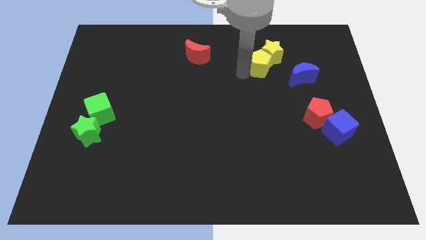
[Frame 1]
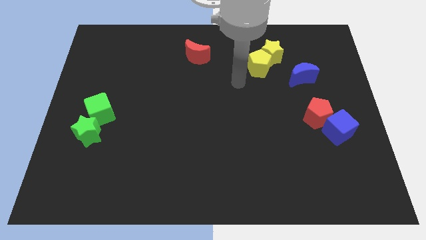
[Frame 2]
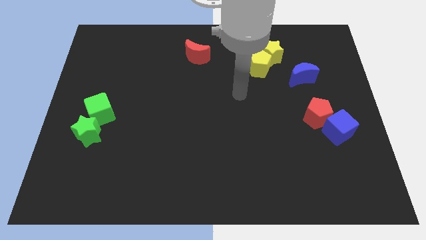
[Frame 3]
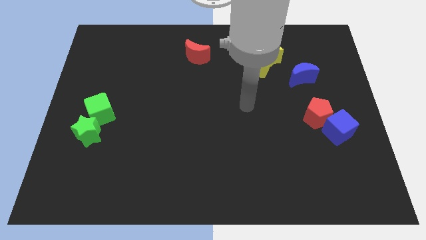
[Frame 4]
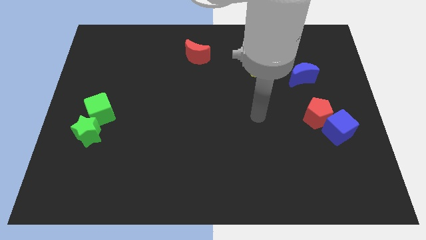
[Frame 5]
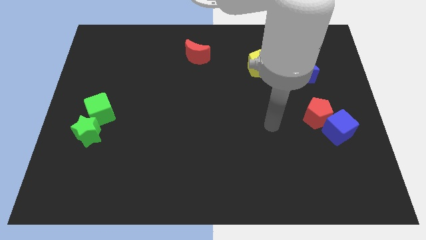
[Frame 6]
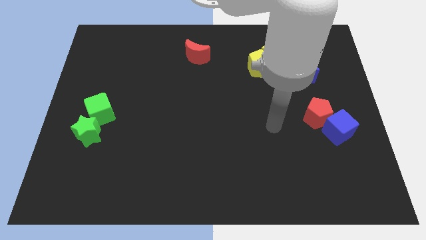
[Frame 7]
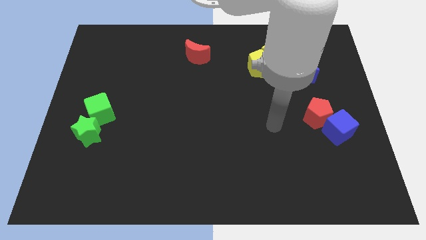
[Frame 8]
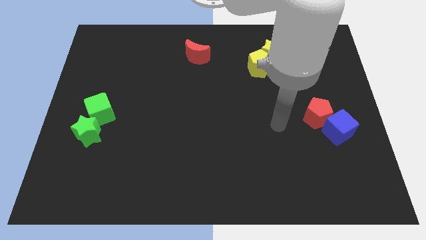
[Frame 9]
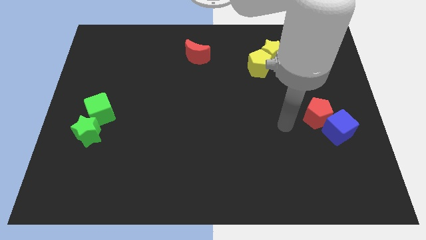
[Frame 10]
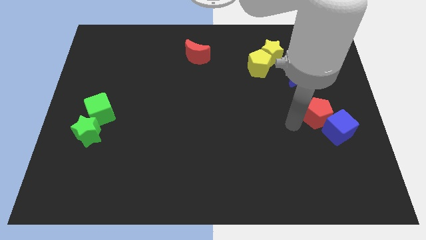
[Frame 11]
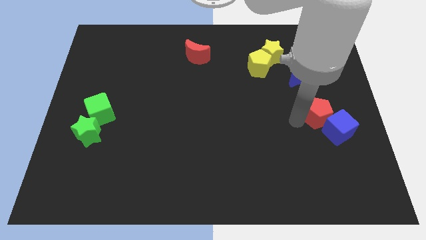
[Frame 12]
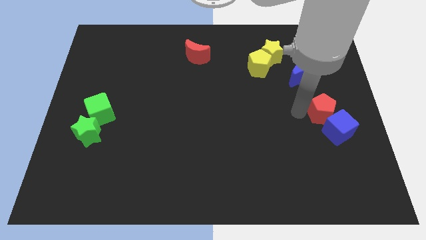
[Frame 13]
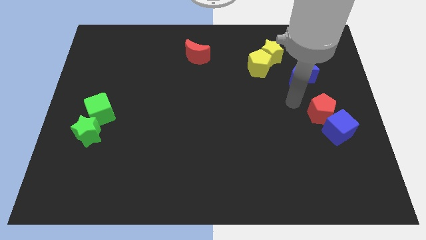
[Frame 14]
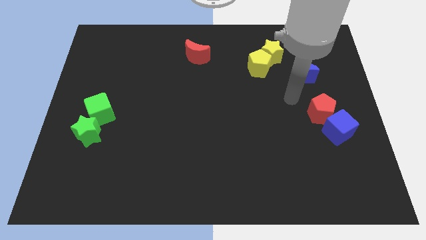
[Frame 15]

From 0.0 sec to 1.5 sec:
move your arm away from the yellow pentagon

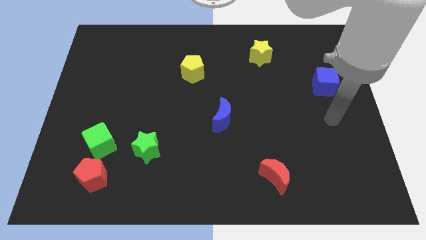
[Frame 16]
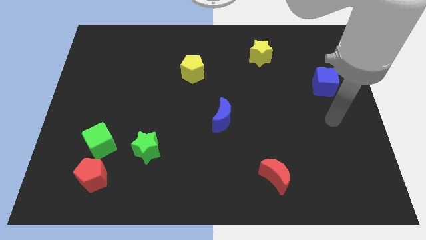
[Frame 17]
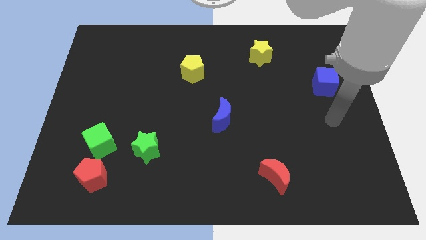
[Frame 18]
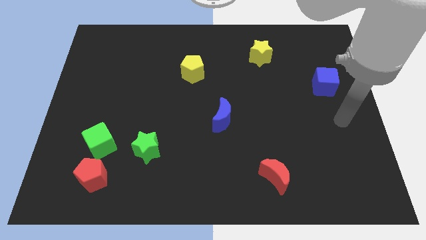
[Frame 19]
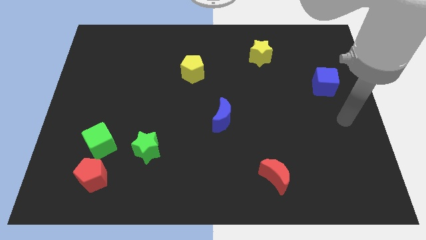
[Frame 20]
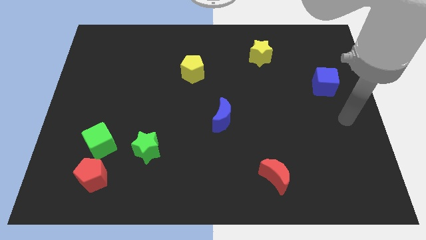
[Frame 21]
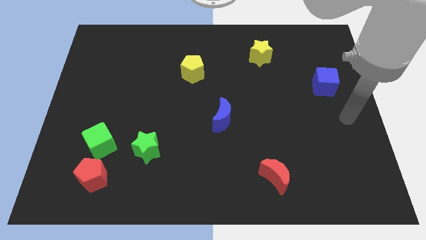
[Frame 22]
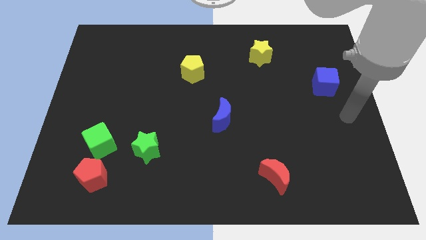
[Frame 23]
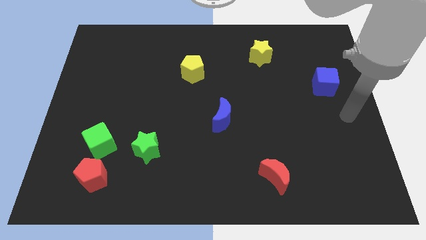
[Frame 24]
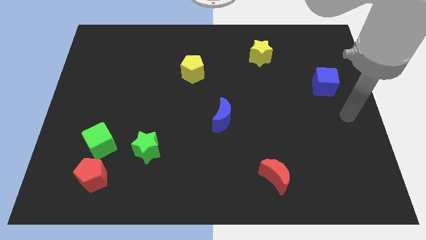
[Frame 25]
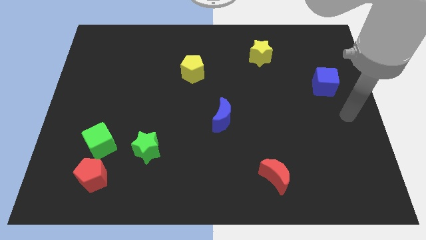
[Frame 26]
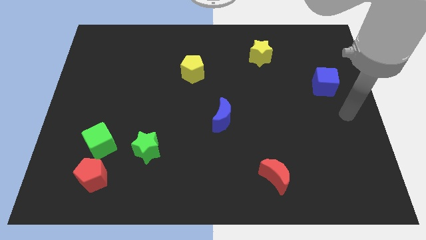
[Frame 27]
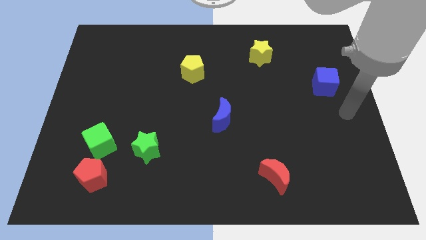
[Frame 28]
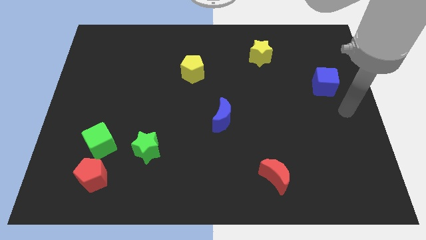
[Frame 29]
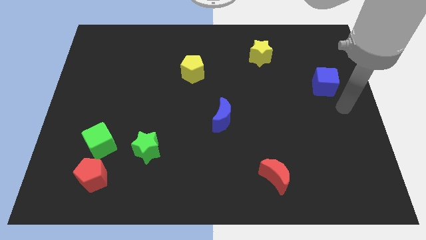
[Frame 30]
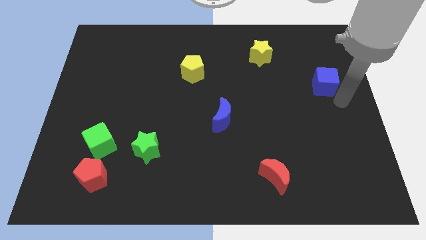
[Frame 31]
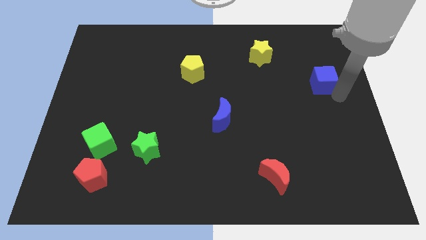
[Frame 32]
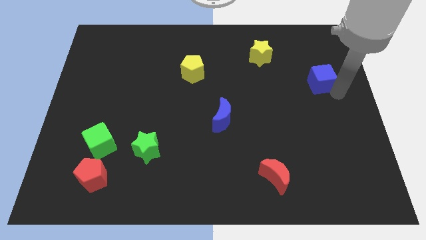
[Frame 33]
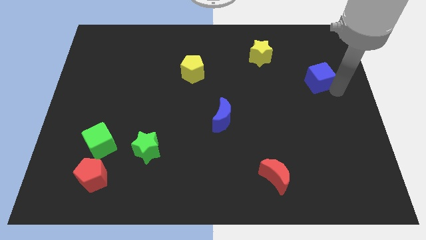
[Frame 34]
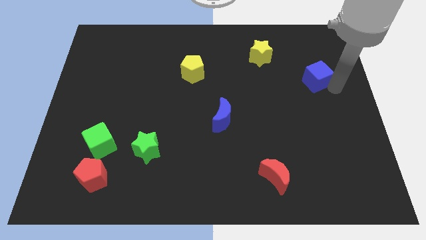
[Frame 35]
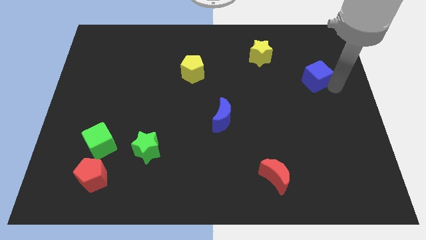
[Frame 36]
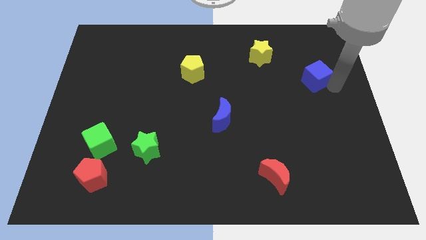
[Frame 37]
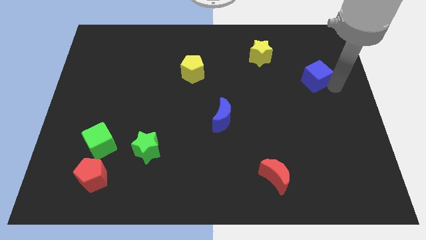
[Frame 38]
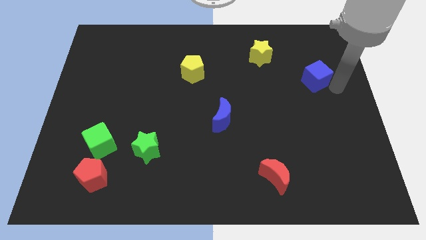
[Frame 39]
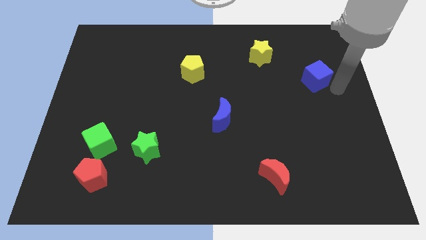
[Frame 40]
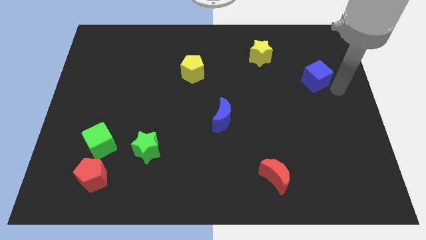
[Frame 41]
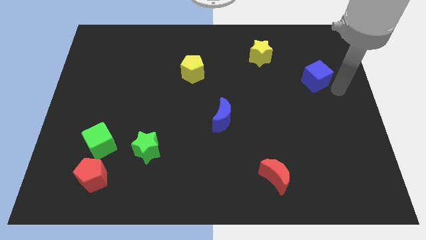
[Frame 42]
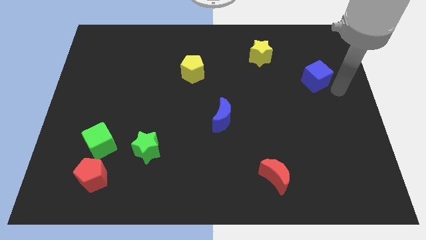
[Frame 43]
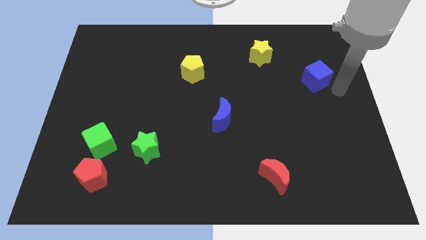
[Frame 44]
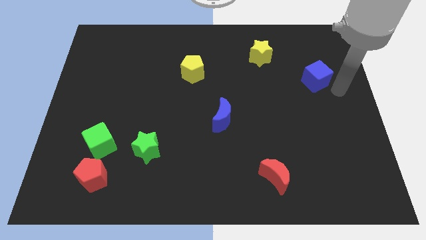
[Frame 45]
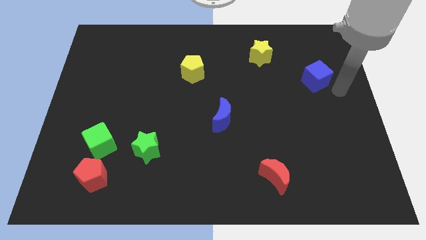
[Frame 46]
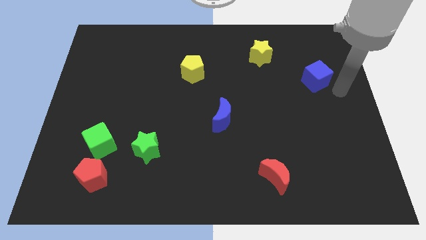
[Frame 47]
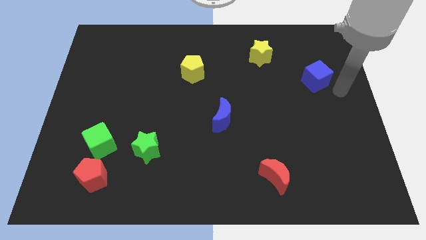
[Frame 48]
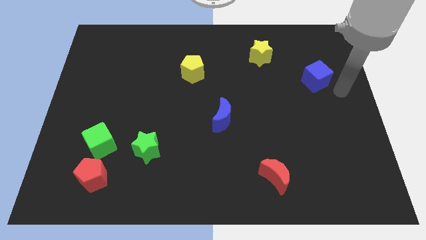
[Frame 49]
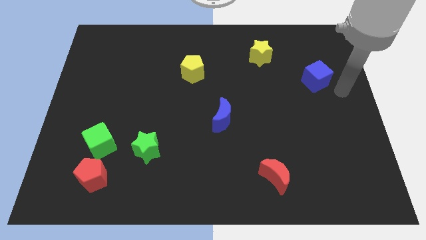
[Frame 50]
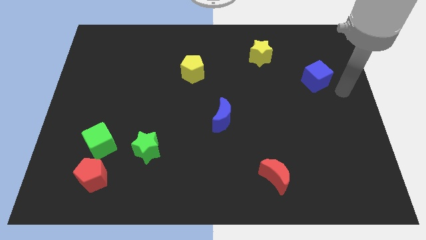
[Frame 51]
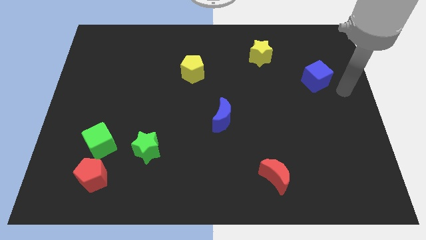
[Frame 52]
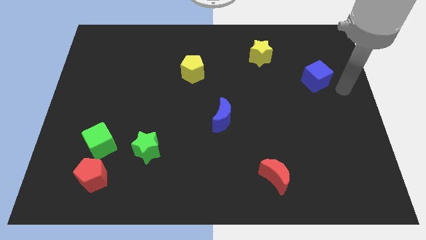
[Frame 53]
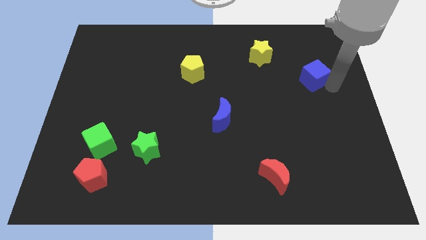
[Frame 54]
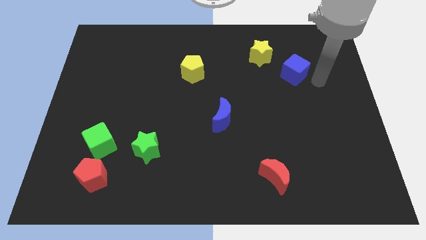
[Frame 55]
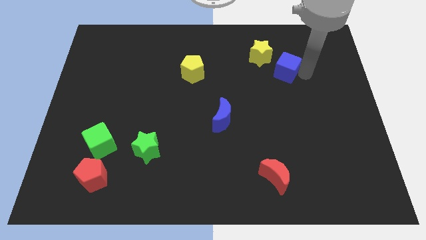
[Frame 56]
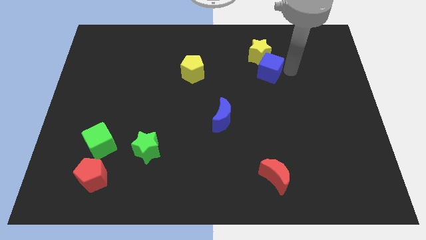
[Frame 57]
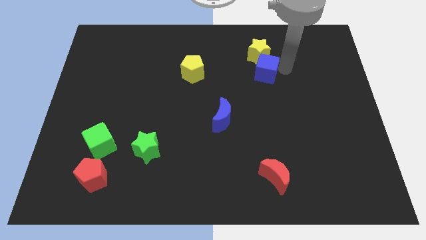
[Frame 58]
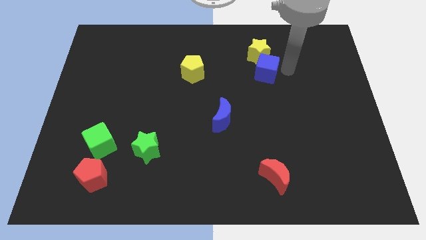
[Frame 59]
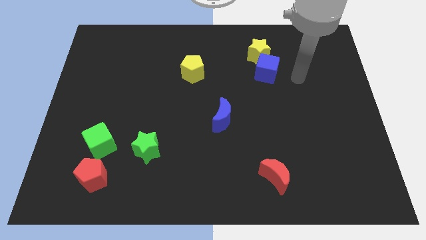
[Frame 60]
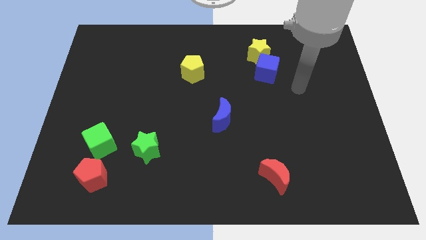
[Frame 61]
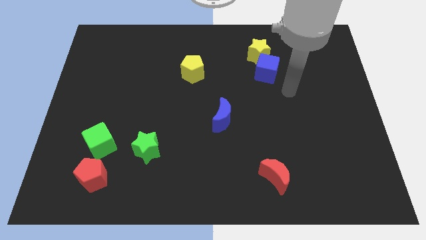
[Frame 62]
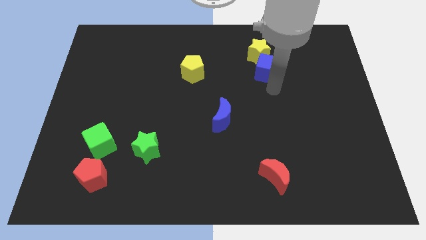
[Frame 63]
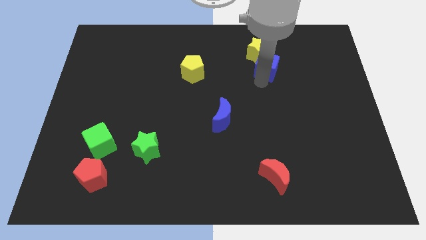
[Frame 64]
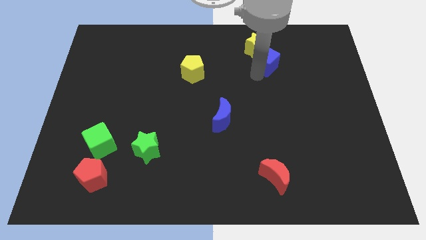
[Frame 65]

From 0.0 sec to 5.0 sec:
push the blue cube into the yellow star

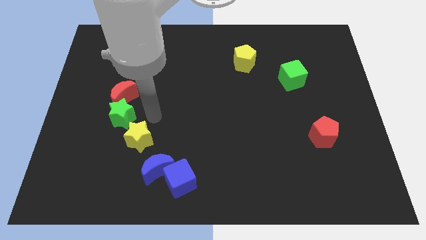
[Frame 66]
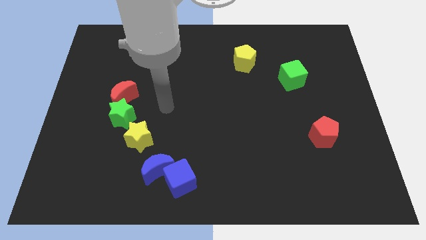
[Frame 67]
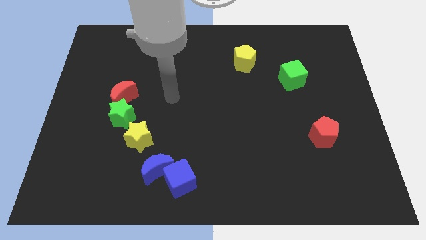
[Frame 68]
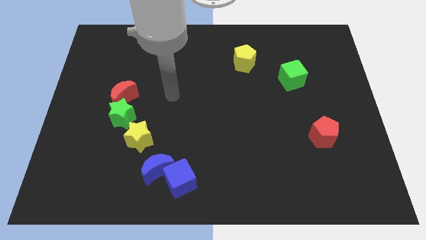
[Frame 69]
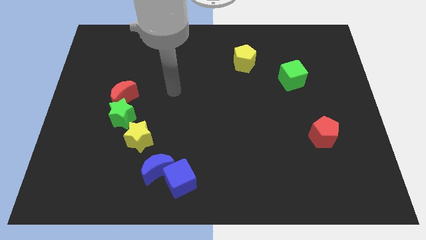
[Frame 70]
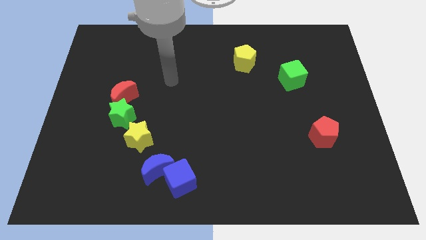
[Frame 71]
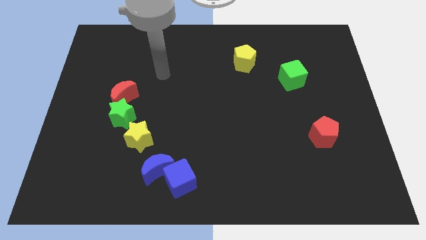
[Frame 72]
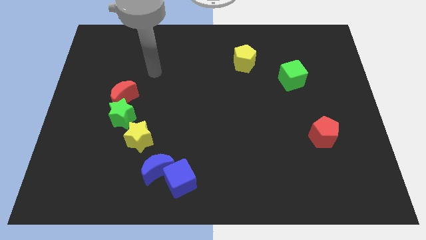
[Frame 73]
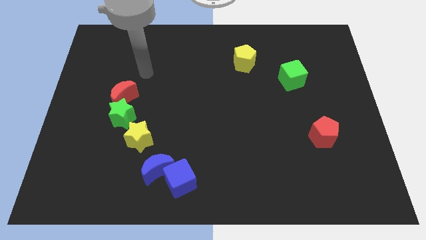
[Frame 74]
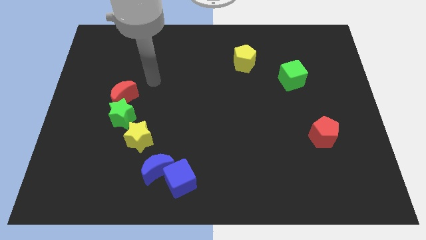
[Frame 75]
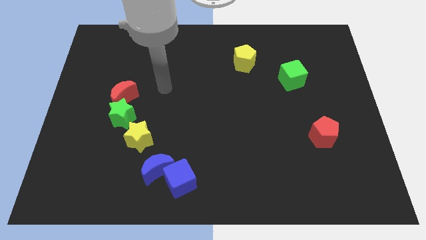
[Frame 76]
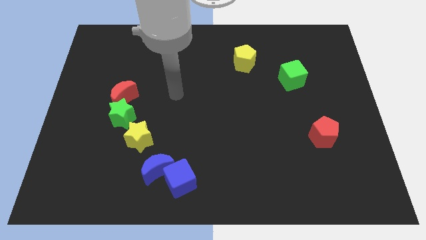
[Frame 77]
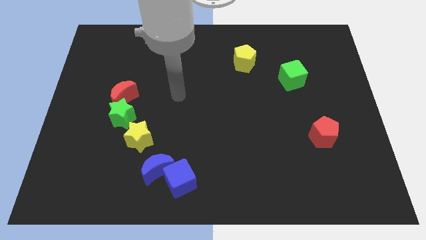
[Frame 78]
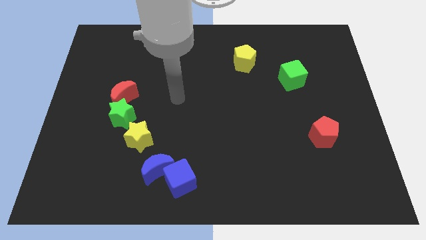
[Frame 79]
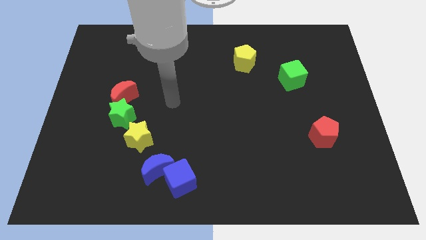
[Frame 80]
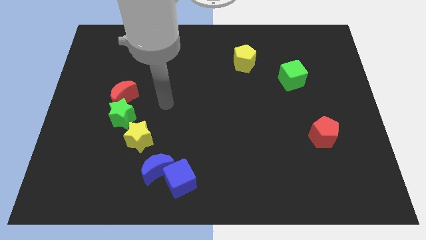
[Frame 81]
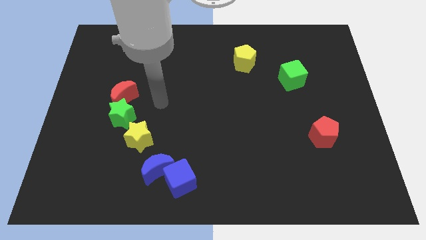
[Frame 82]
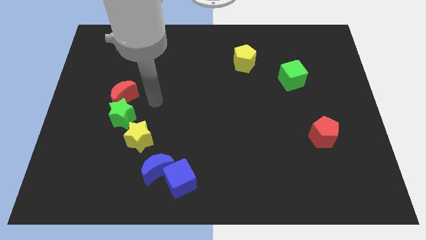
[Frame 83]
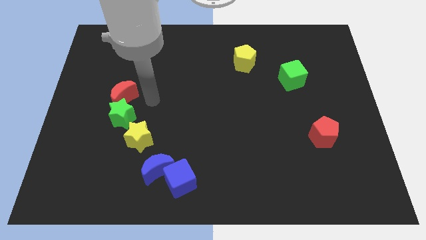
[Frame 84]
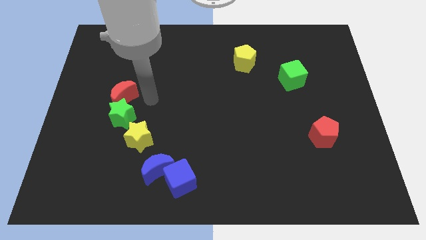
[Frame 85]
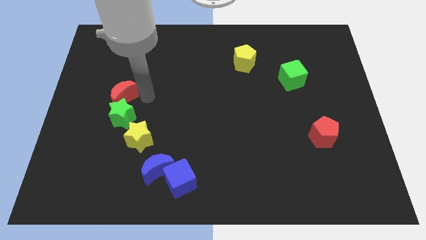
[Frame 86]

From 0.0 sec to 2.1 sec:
point your arm at the bottom right side of red moon

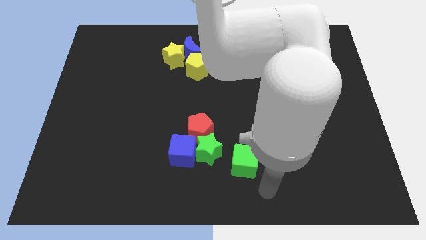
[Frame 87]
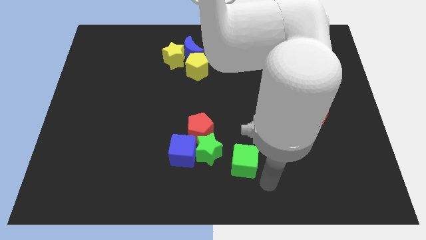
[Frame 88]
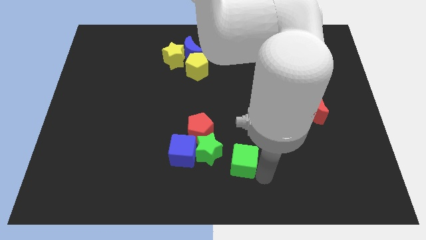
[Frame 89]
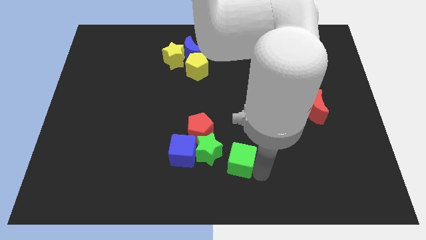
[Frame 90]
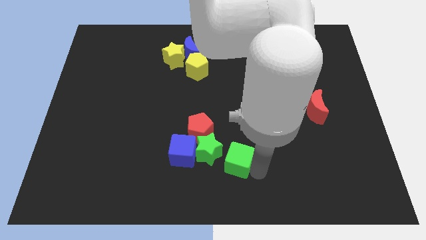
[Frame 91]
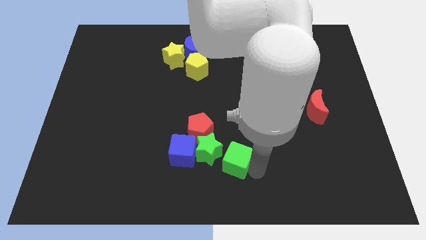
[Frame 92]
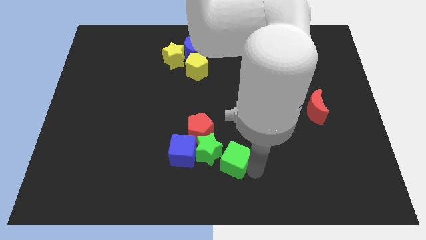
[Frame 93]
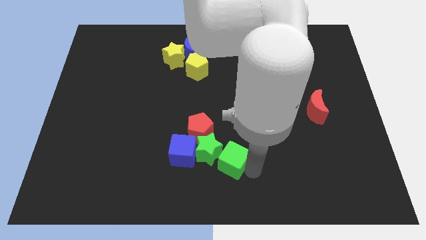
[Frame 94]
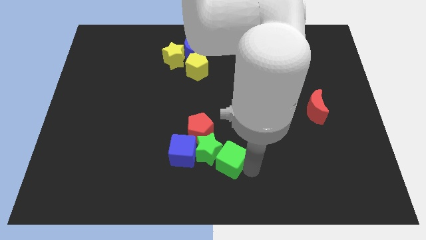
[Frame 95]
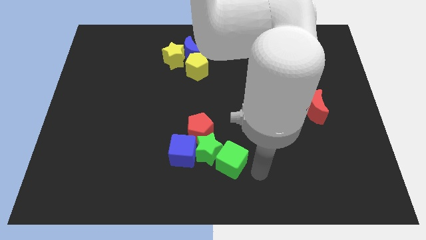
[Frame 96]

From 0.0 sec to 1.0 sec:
push green cube towards green star
